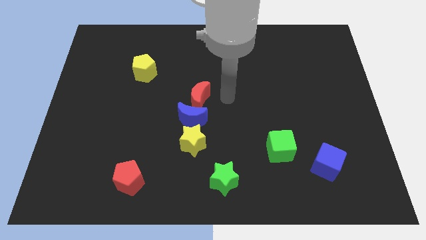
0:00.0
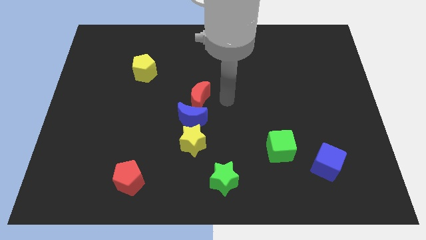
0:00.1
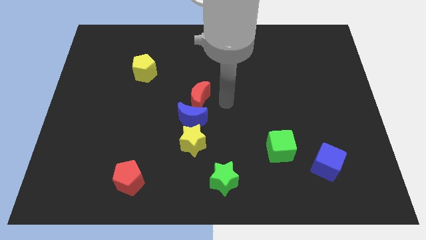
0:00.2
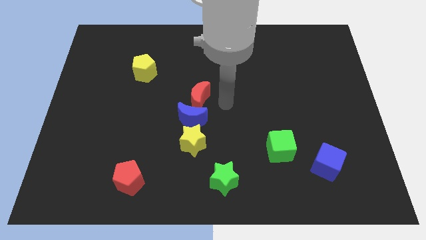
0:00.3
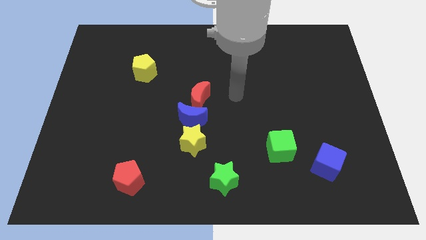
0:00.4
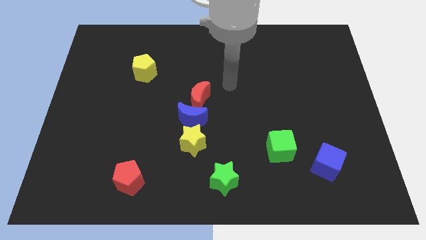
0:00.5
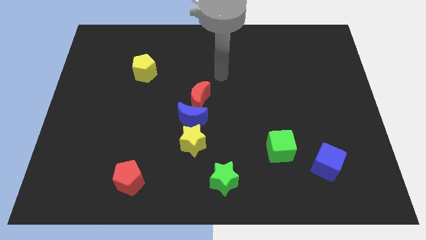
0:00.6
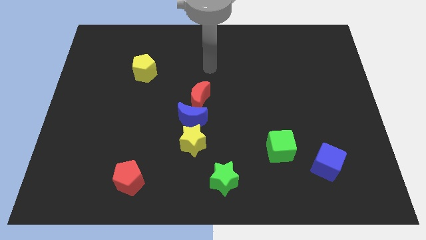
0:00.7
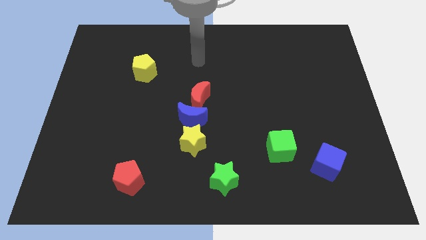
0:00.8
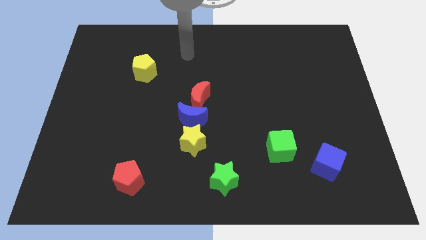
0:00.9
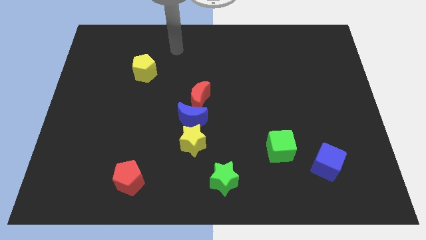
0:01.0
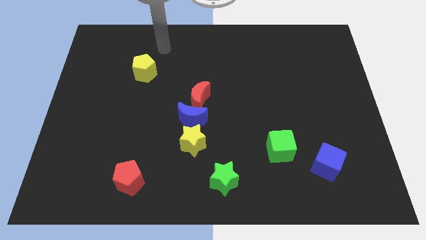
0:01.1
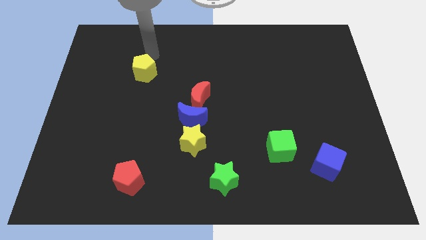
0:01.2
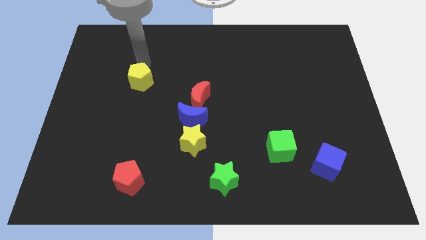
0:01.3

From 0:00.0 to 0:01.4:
push the yellow pentagon slightly to the bottom side

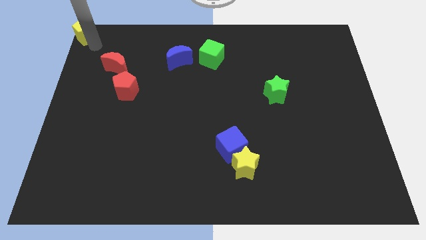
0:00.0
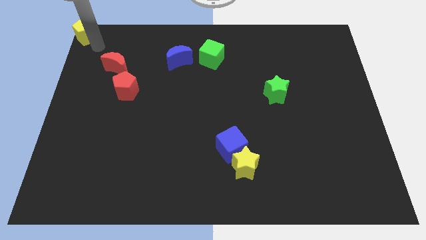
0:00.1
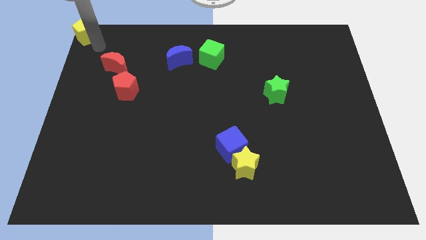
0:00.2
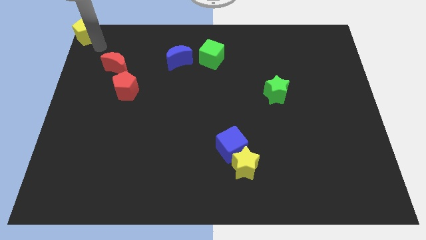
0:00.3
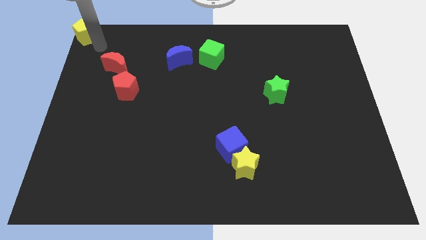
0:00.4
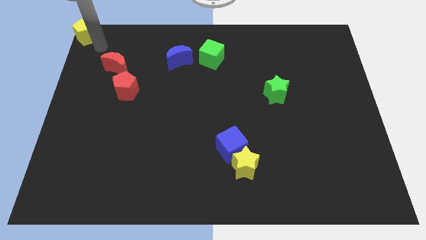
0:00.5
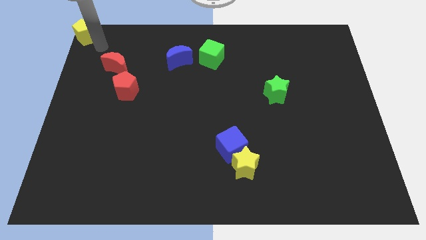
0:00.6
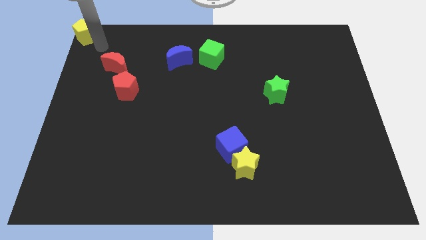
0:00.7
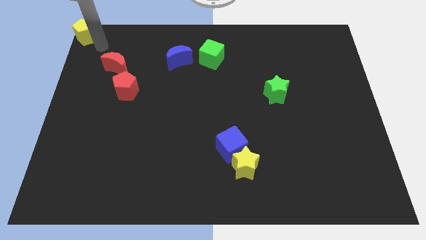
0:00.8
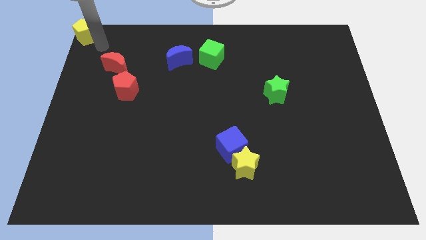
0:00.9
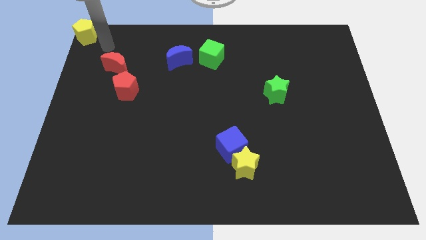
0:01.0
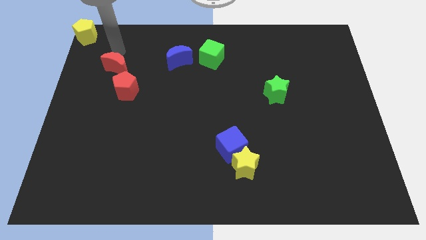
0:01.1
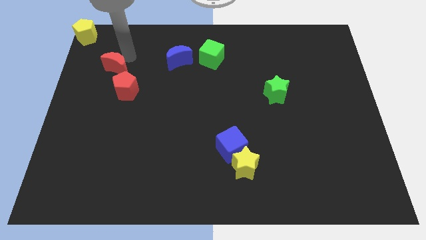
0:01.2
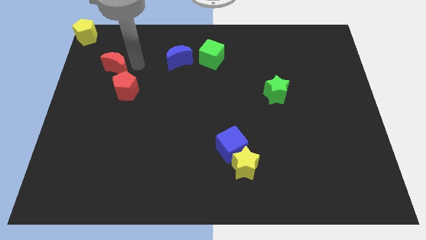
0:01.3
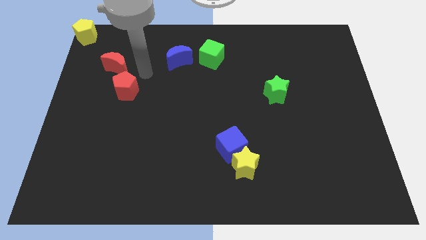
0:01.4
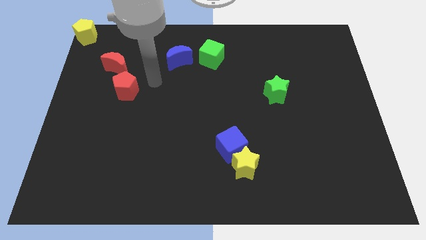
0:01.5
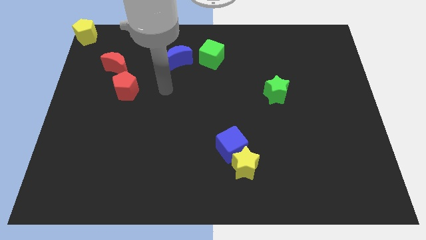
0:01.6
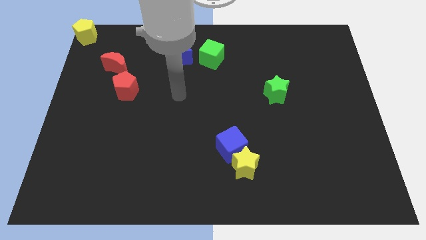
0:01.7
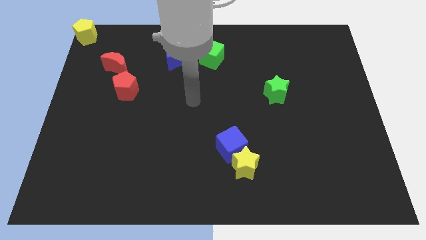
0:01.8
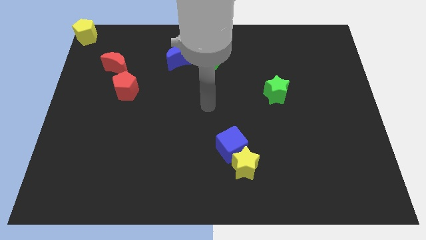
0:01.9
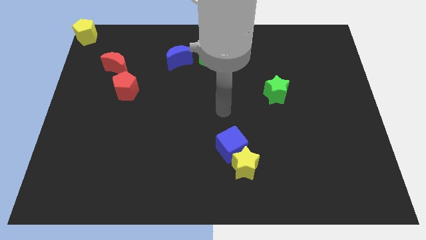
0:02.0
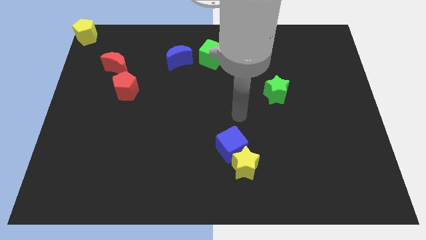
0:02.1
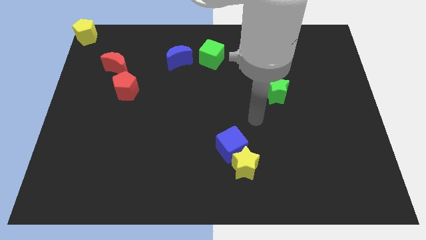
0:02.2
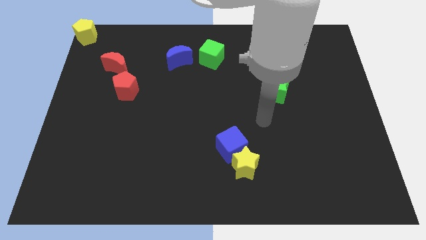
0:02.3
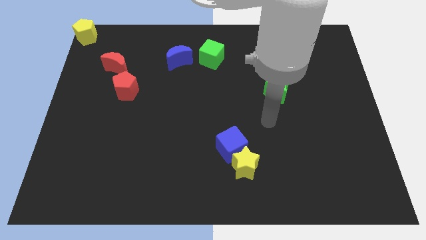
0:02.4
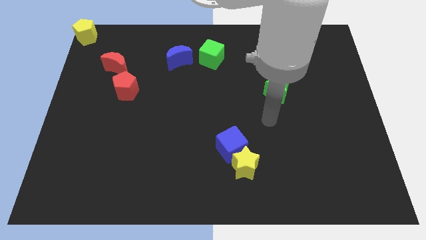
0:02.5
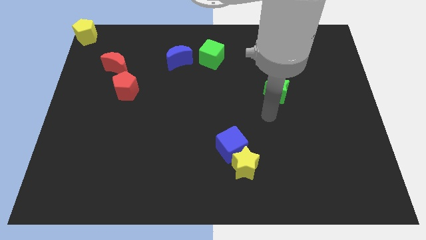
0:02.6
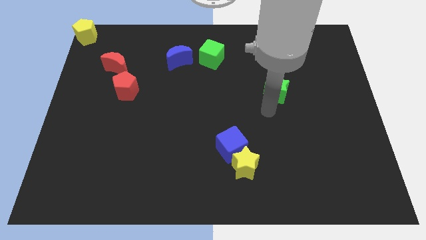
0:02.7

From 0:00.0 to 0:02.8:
move your arm to the bottom of the green star

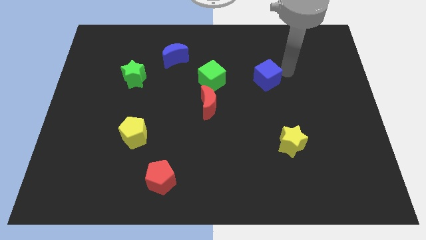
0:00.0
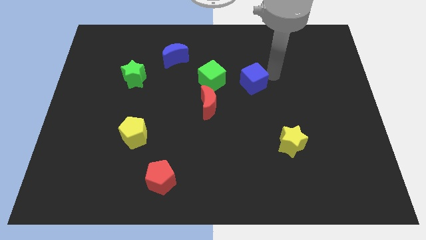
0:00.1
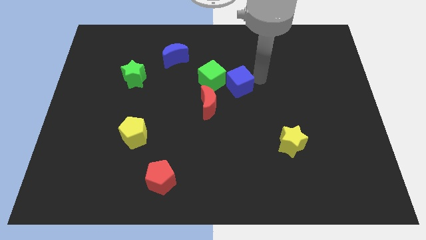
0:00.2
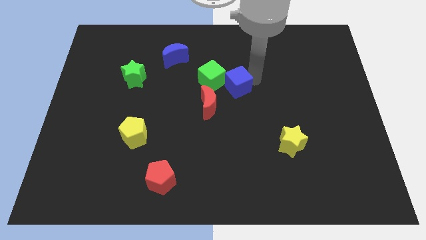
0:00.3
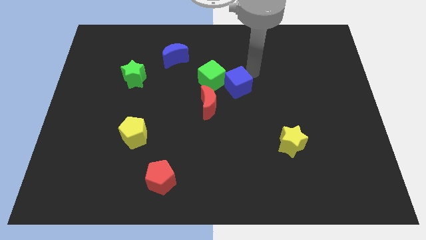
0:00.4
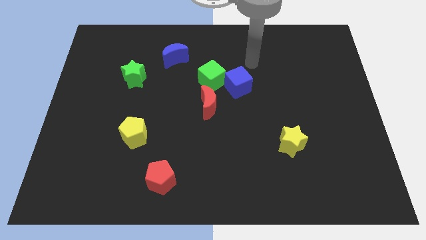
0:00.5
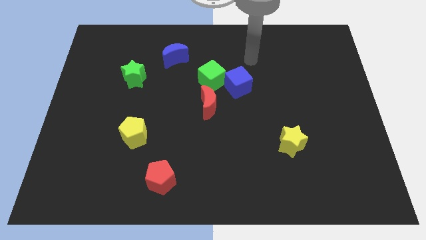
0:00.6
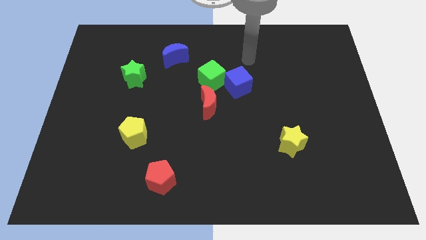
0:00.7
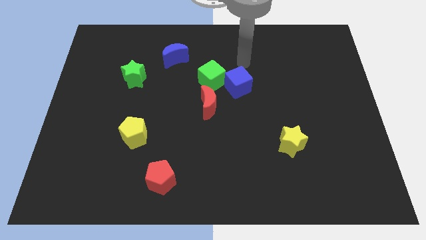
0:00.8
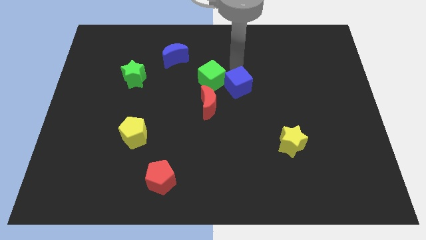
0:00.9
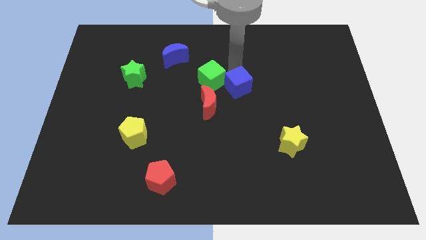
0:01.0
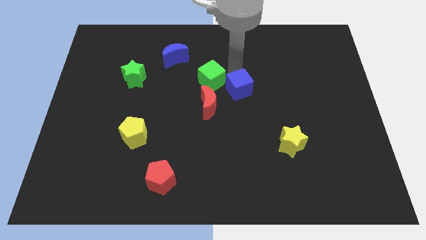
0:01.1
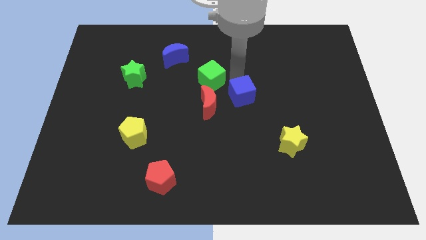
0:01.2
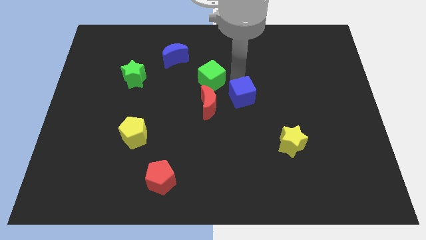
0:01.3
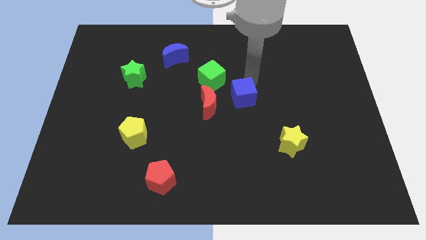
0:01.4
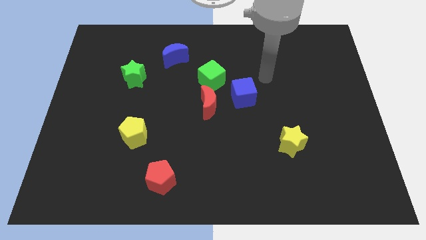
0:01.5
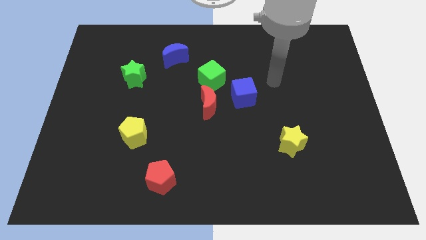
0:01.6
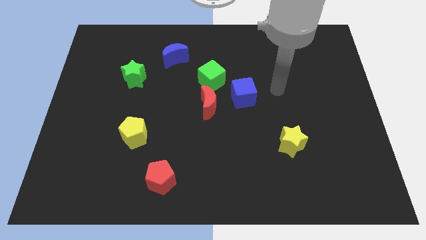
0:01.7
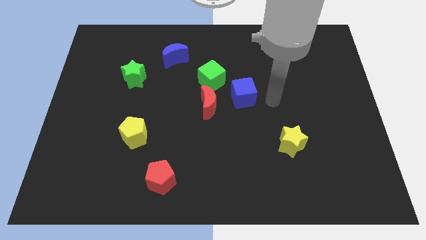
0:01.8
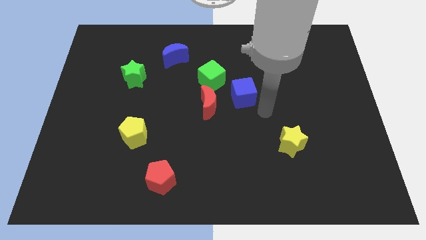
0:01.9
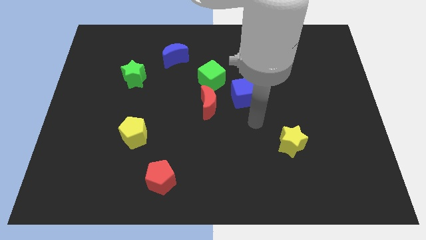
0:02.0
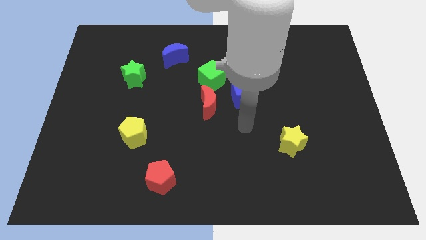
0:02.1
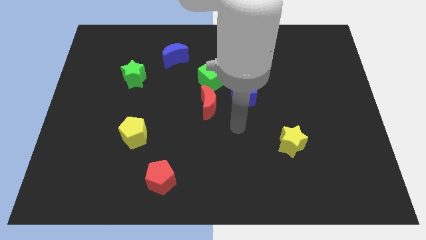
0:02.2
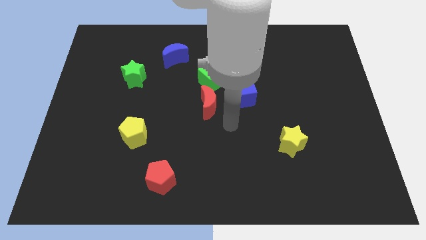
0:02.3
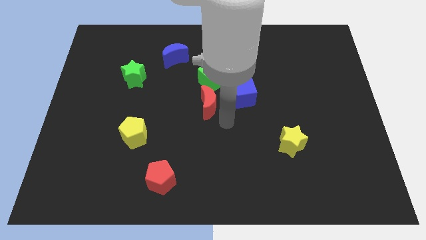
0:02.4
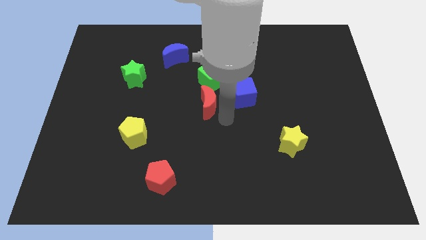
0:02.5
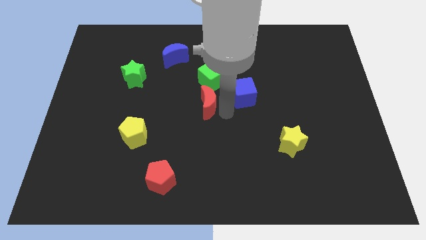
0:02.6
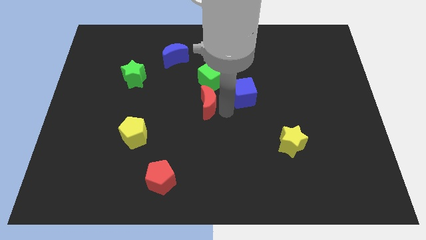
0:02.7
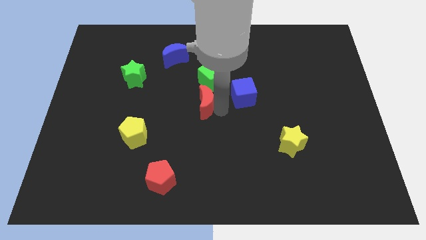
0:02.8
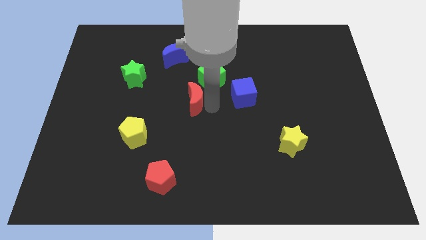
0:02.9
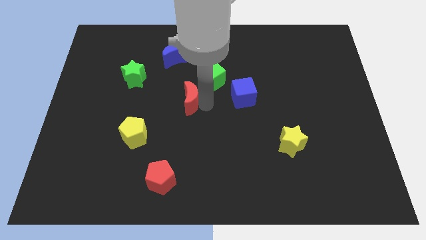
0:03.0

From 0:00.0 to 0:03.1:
move the blue cube parallel to the red crescent at the right side

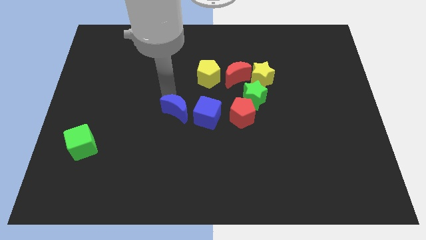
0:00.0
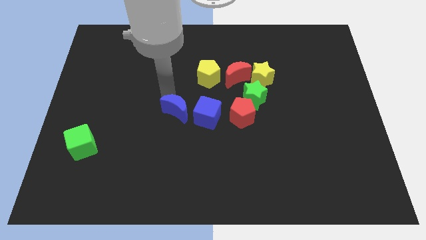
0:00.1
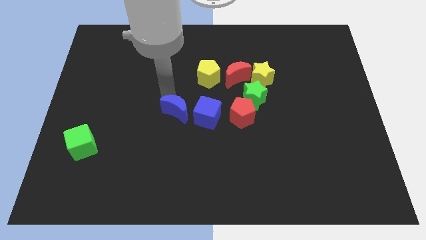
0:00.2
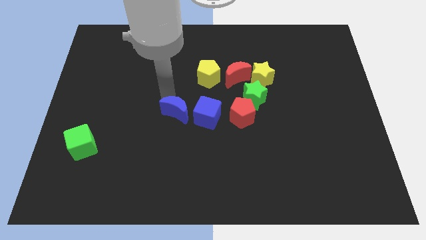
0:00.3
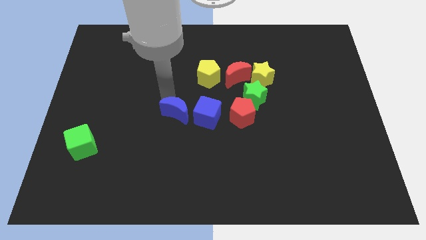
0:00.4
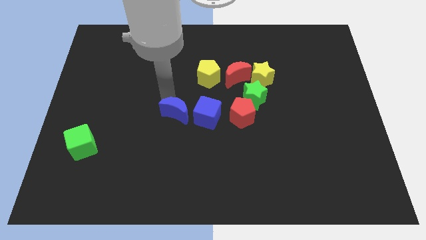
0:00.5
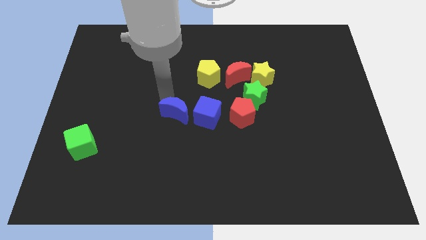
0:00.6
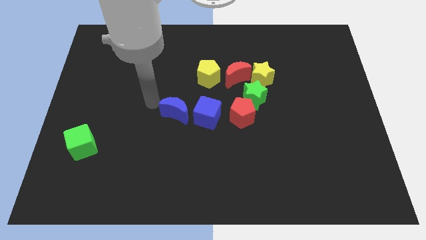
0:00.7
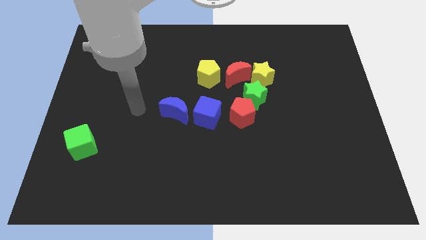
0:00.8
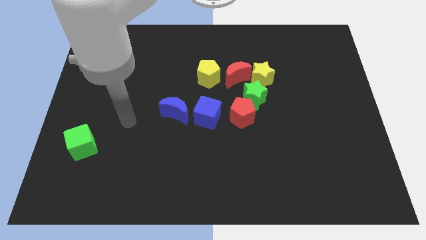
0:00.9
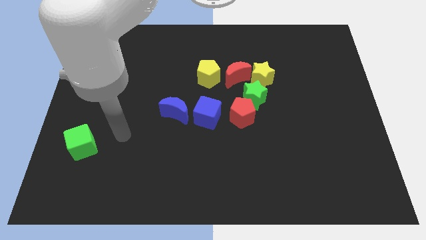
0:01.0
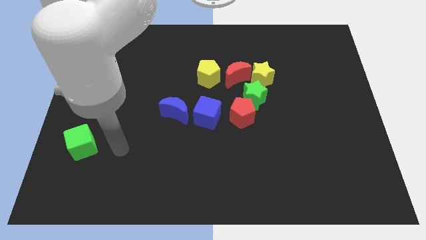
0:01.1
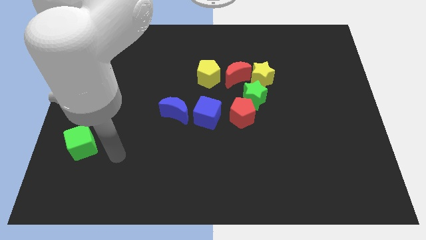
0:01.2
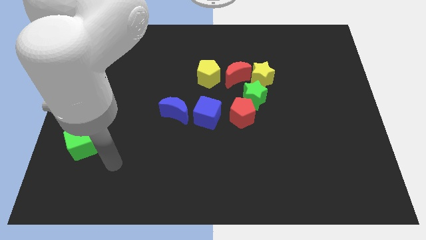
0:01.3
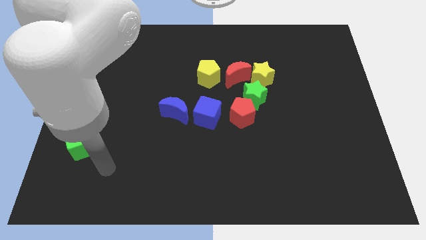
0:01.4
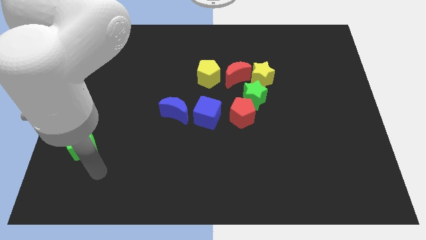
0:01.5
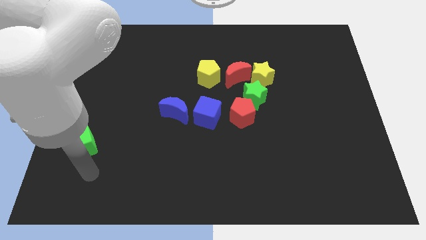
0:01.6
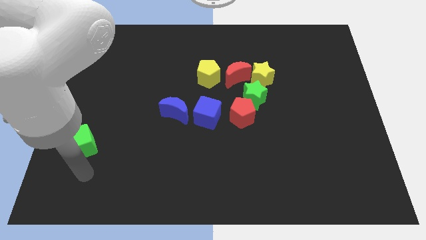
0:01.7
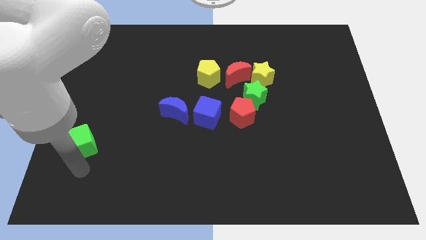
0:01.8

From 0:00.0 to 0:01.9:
go away from the blue moon
